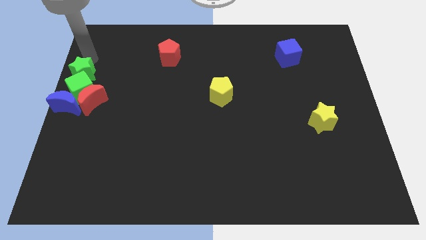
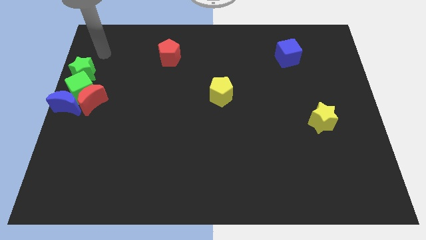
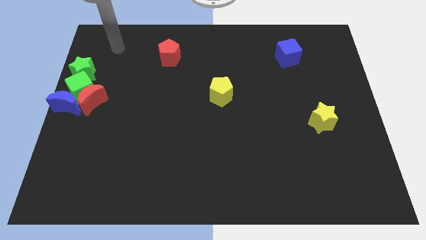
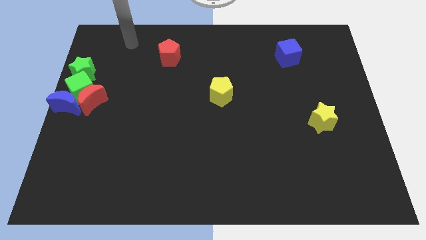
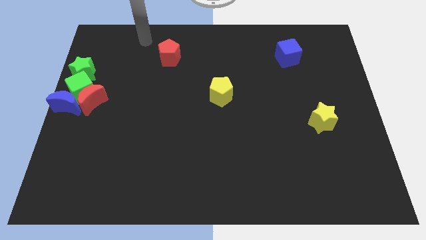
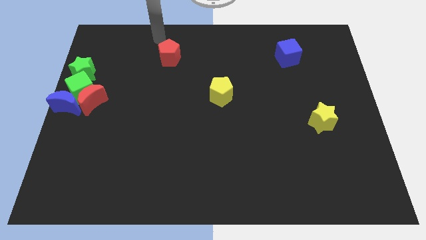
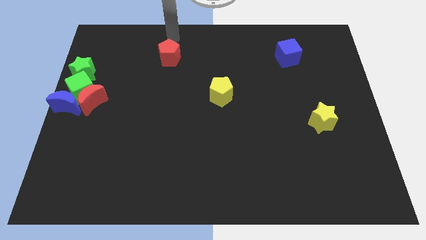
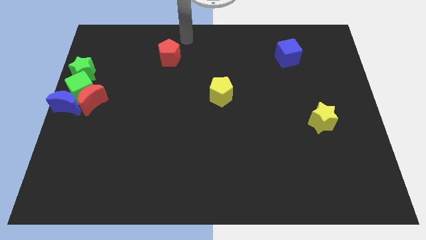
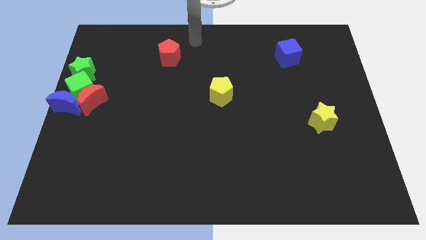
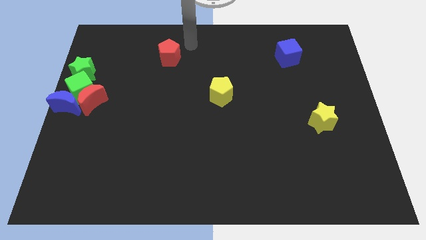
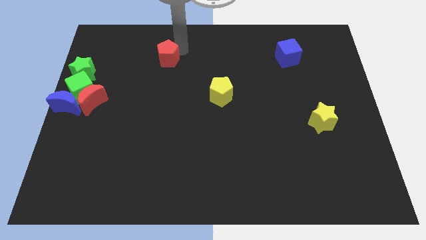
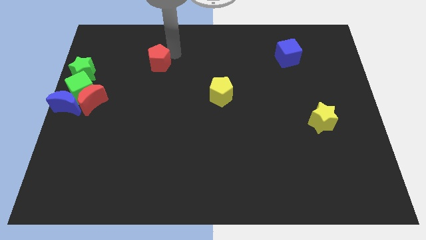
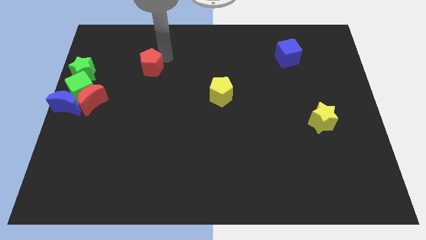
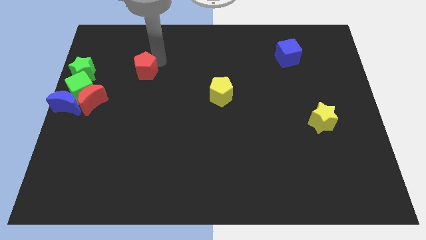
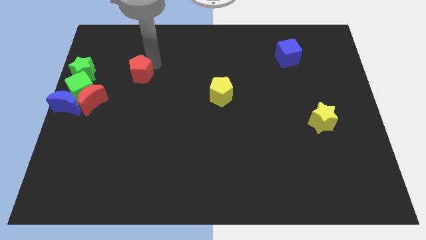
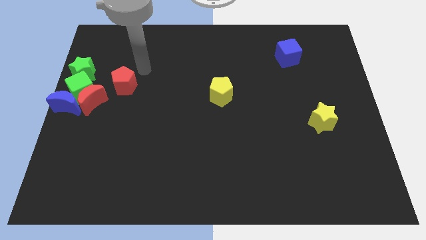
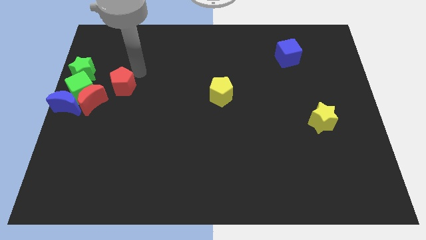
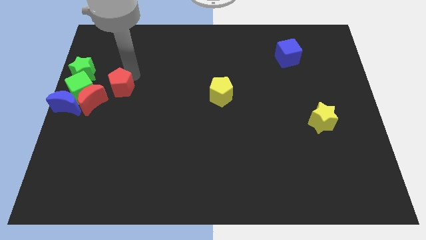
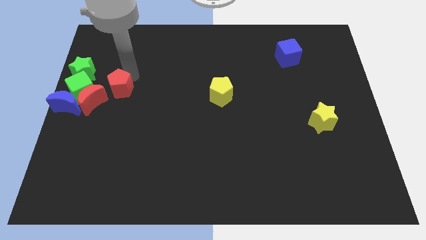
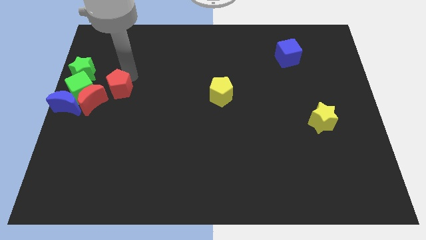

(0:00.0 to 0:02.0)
place the red pentagon to the top right of red moon

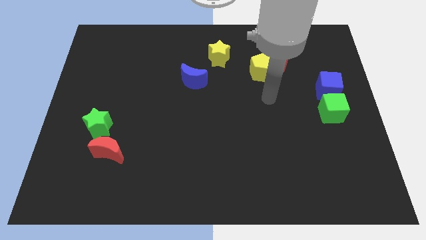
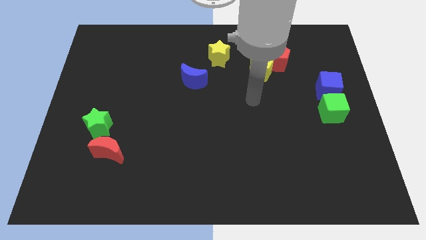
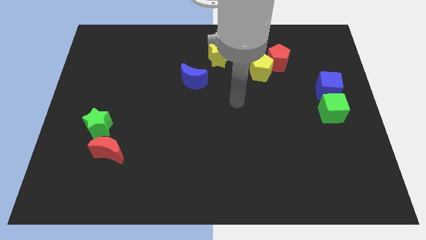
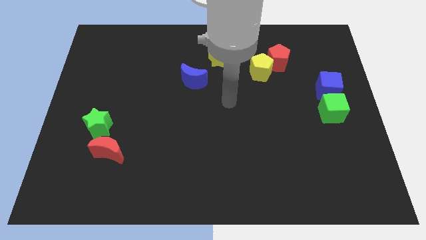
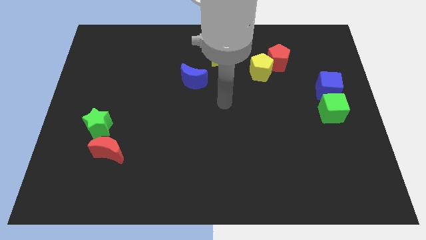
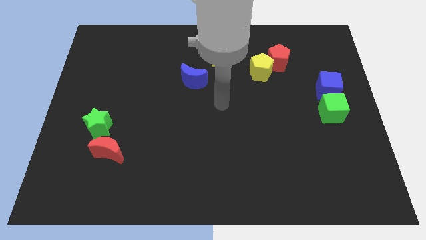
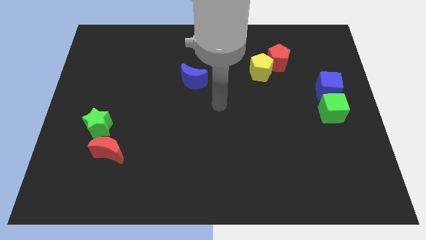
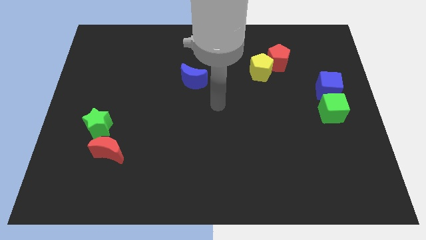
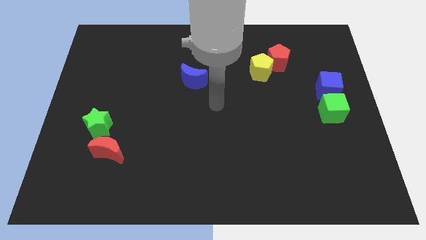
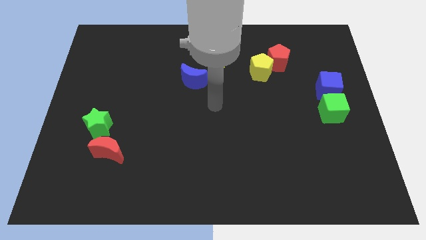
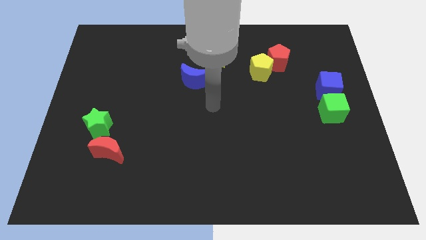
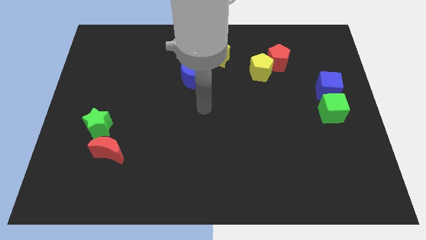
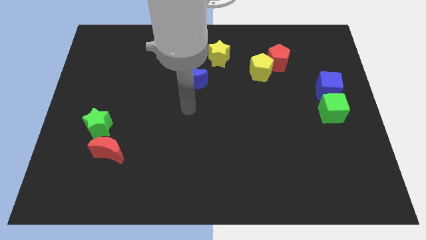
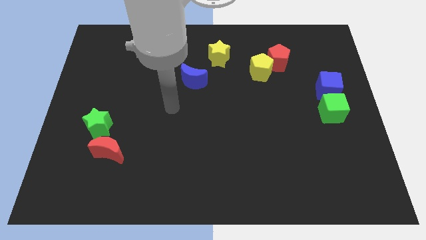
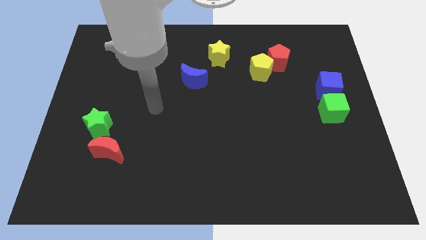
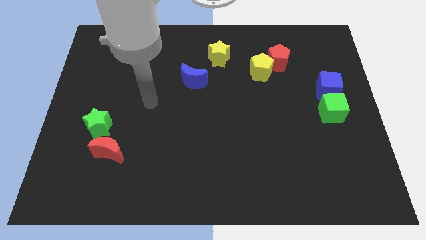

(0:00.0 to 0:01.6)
place your arm in between blue moon and green star

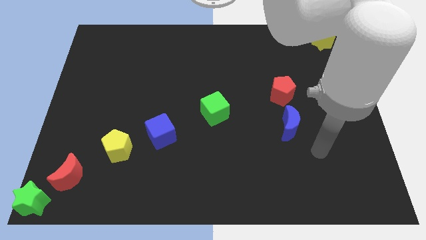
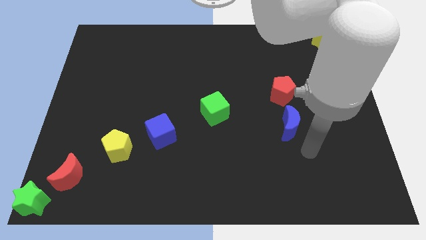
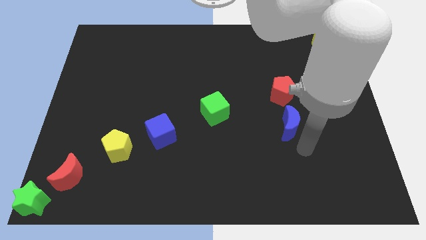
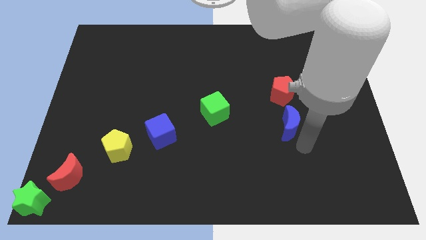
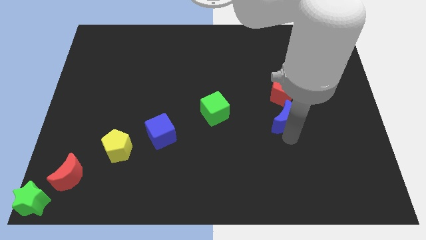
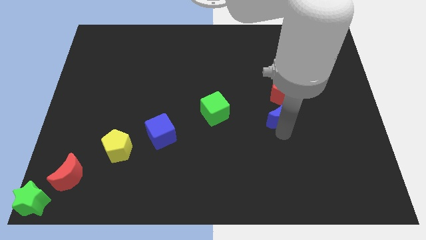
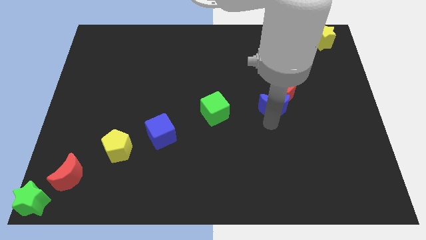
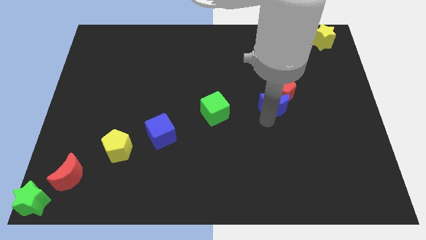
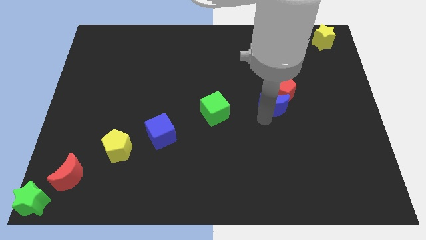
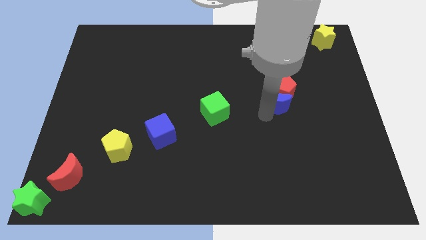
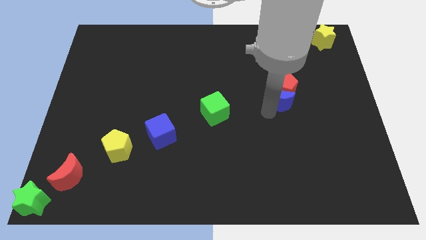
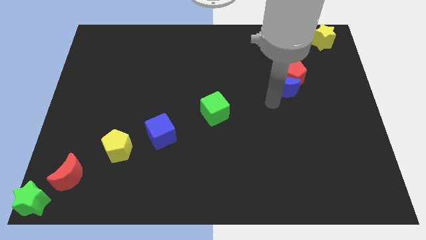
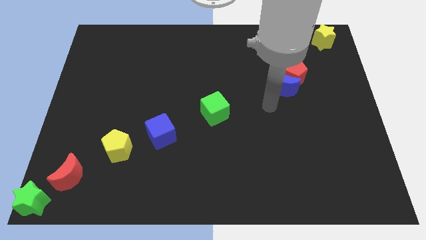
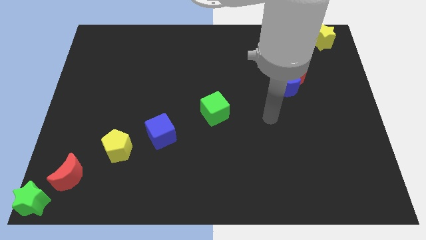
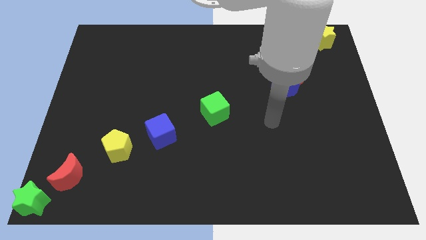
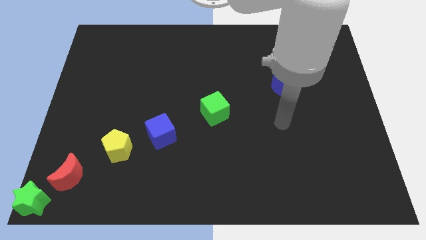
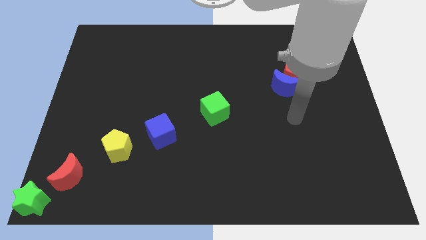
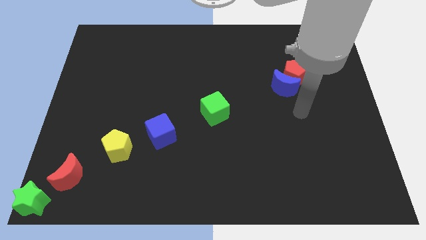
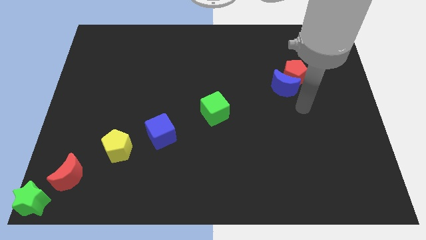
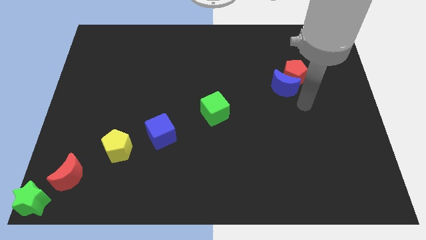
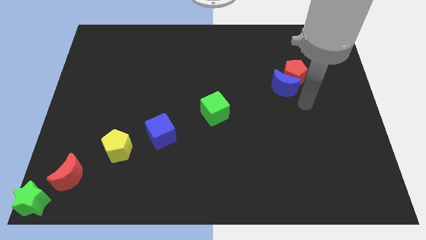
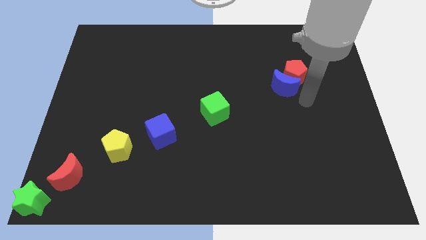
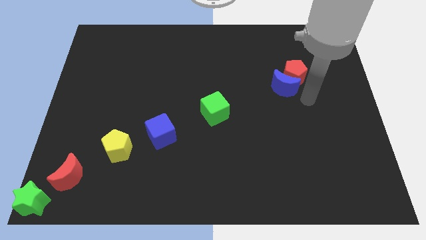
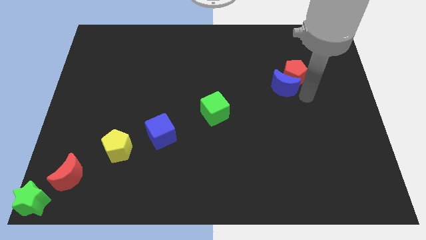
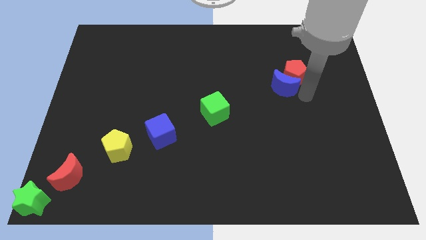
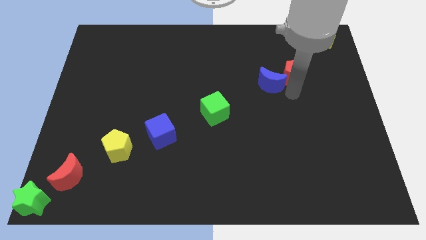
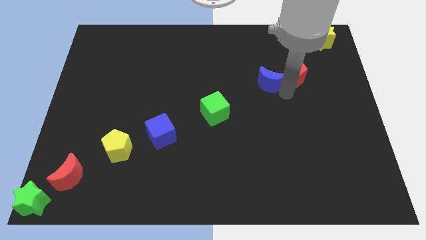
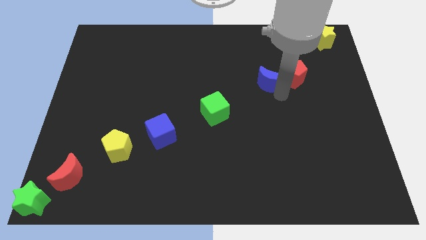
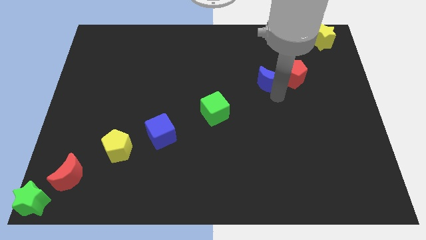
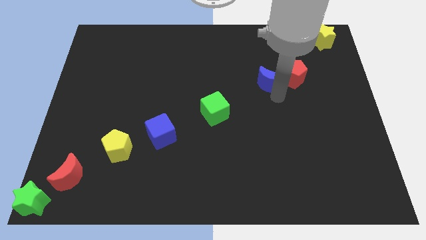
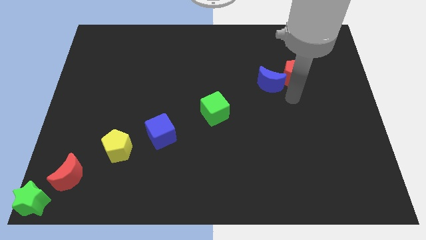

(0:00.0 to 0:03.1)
move blue moon into red pentagon

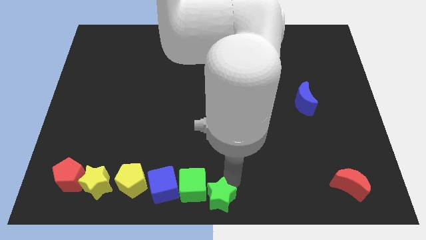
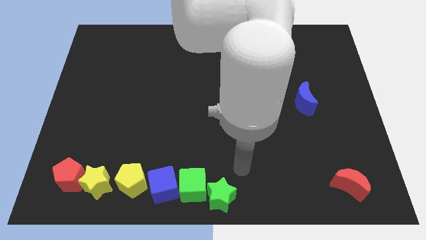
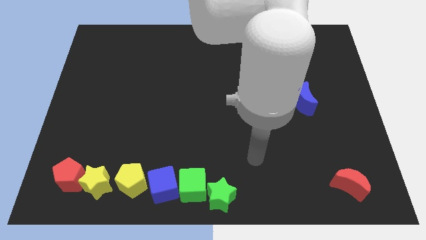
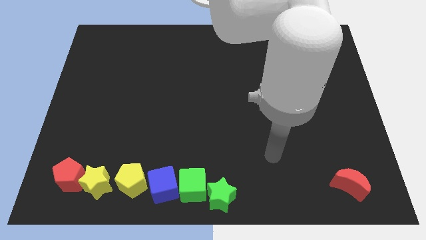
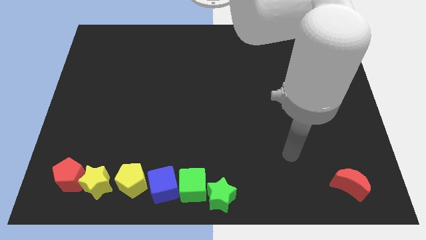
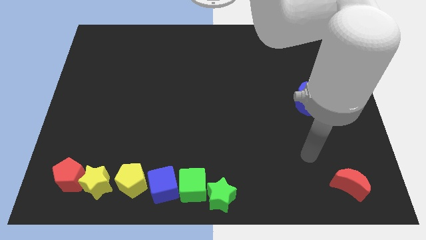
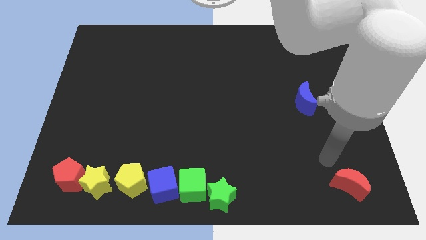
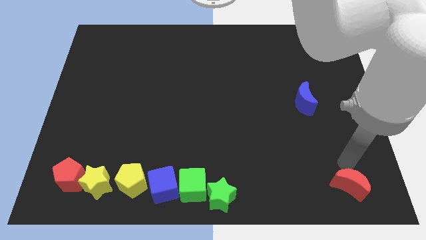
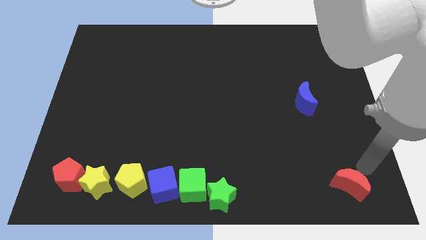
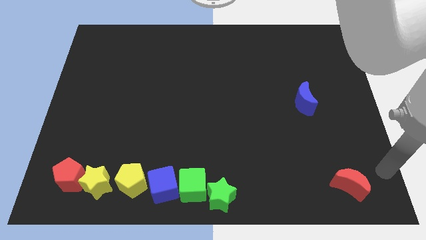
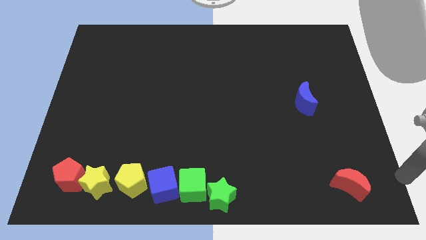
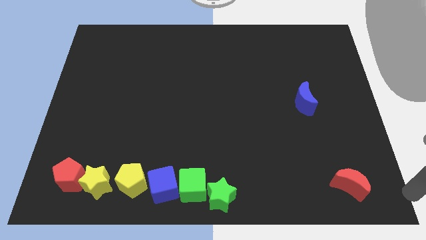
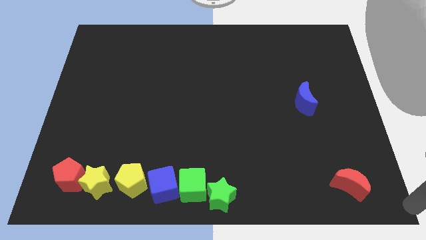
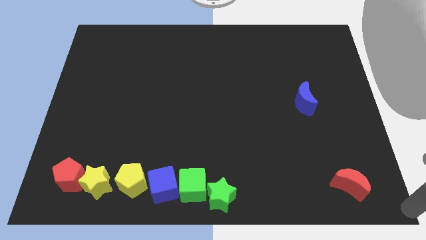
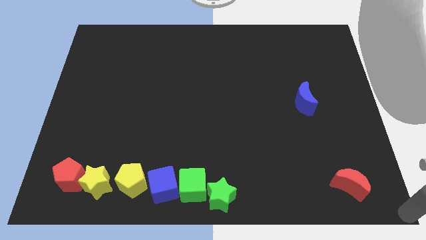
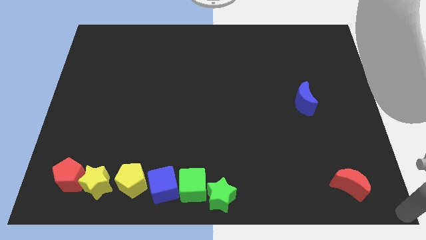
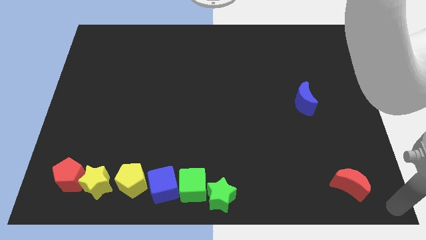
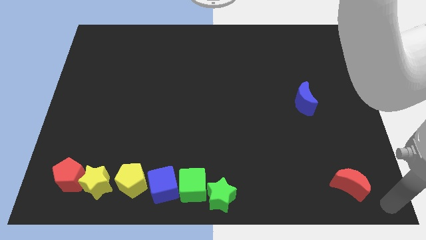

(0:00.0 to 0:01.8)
point your arm at the bottom right corner

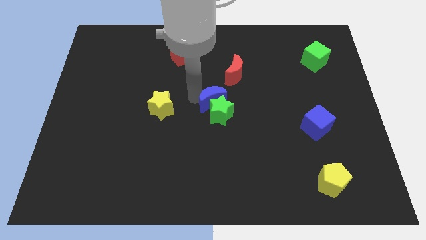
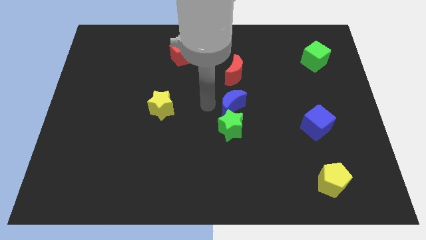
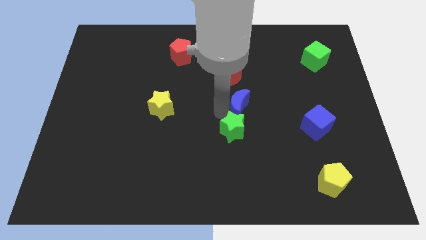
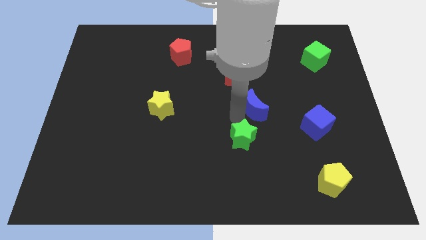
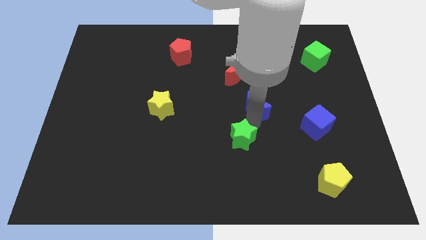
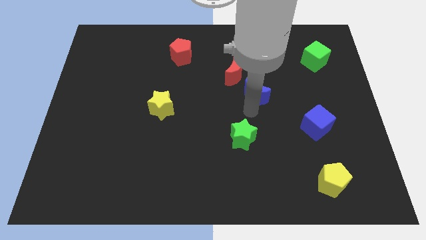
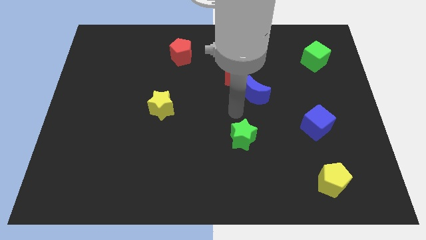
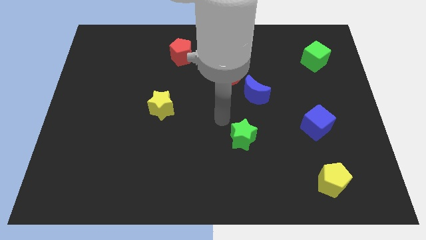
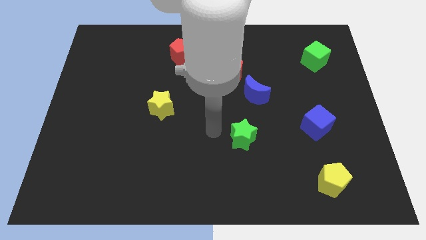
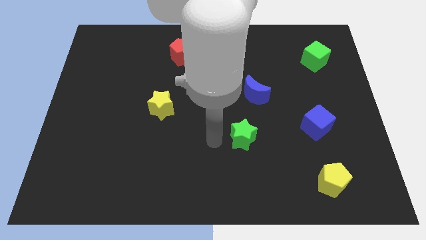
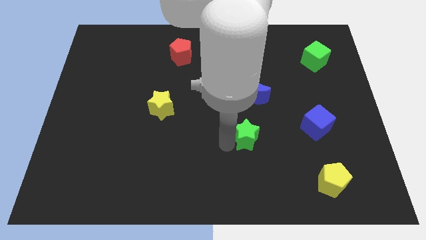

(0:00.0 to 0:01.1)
place blue crescent to the bottom center of red crescent
